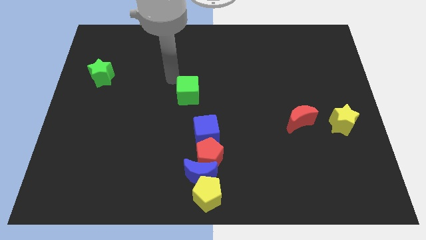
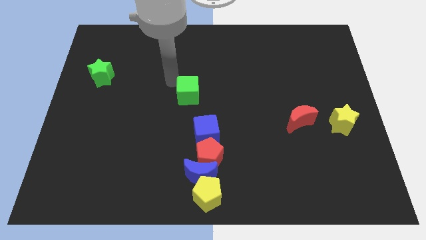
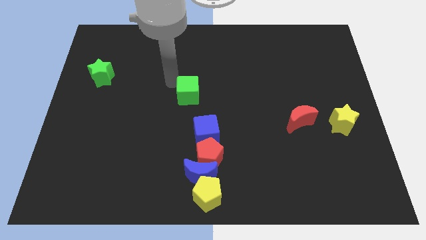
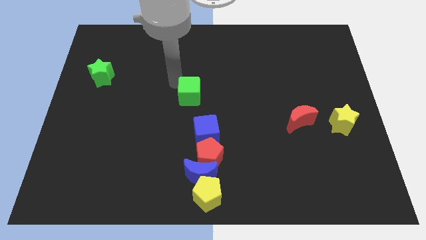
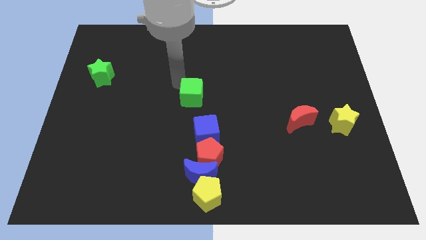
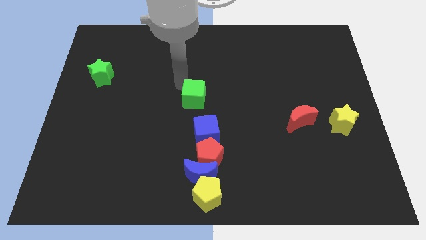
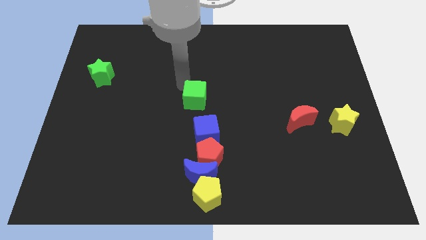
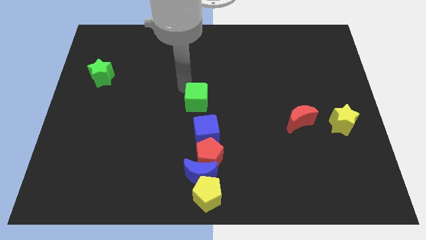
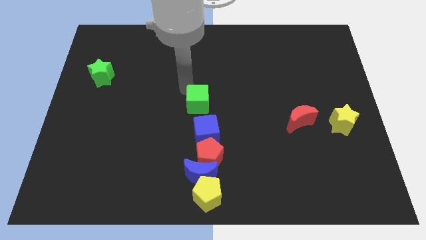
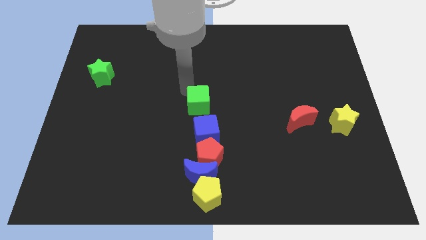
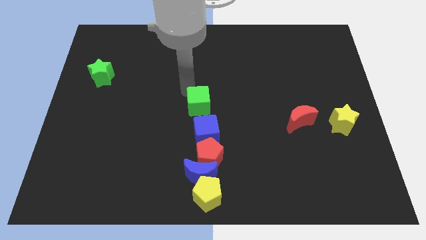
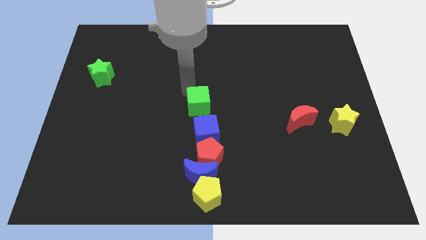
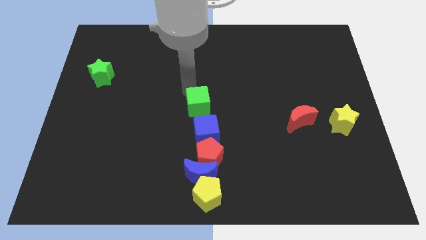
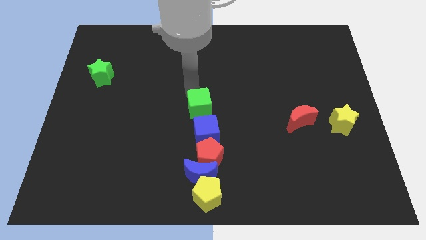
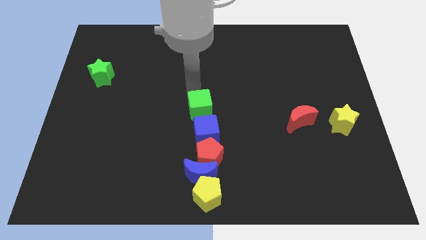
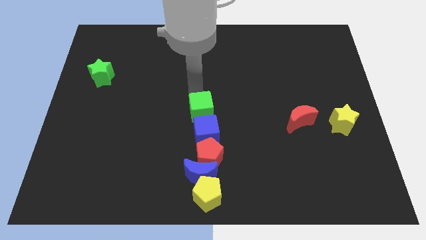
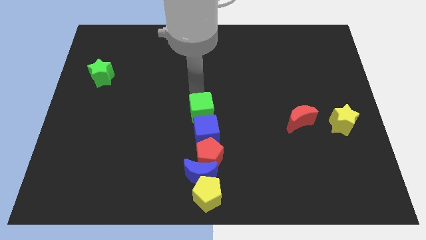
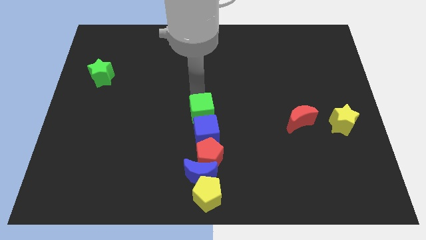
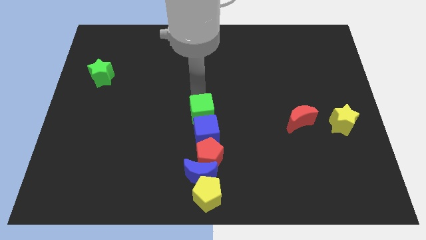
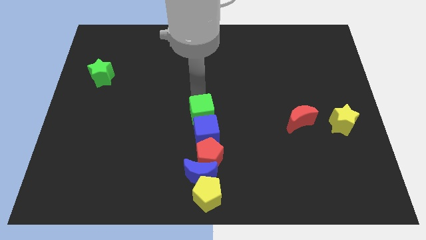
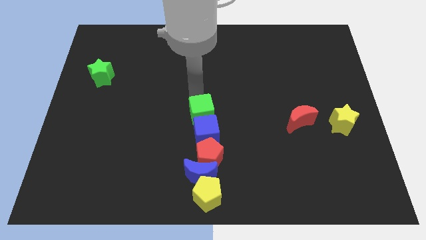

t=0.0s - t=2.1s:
push the green cube to the centre of the board

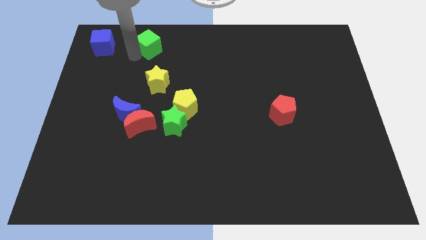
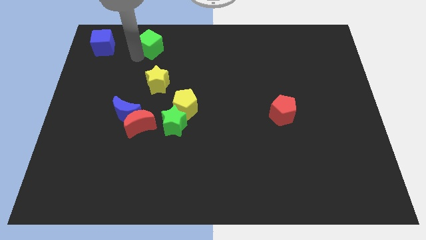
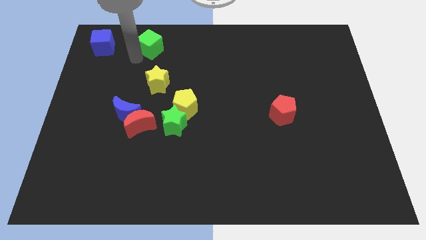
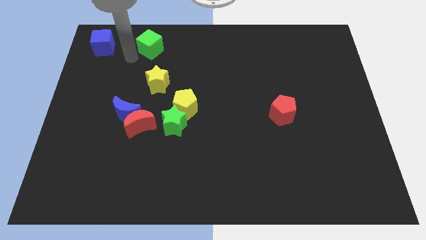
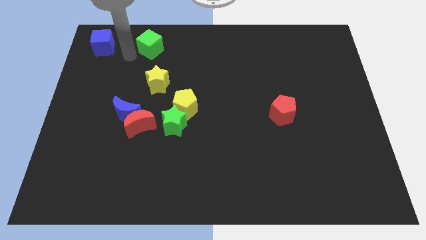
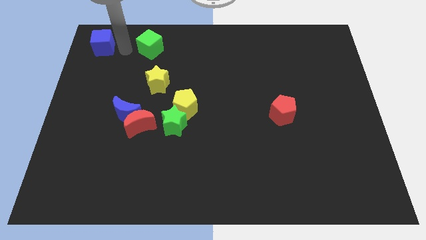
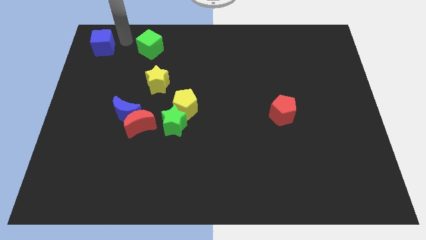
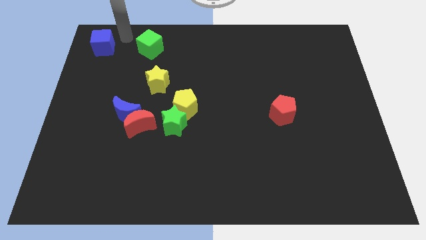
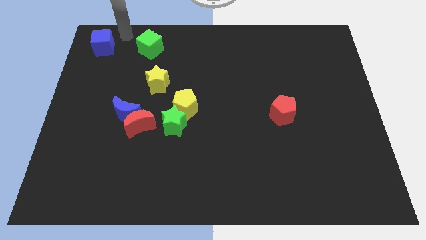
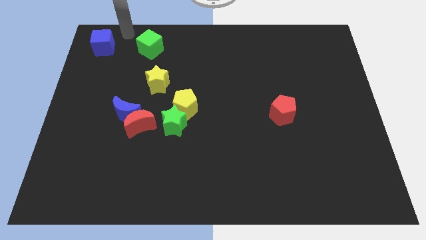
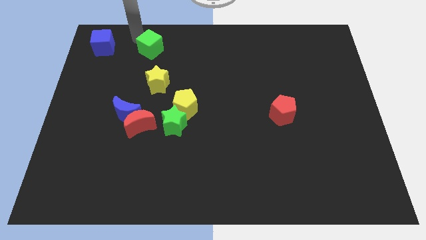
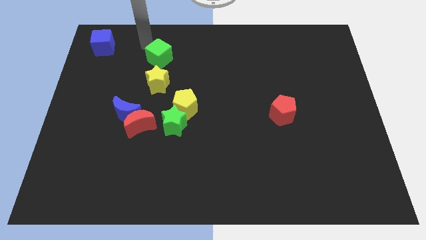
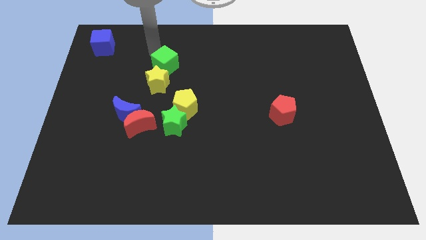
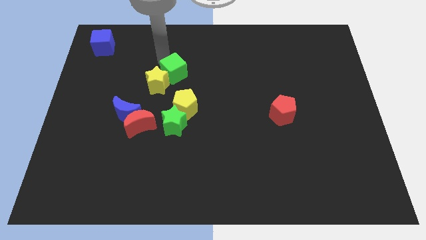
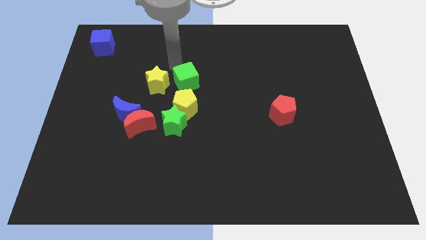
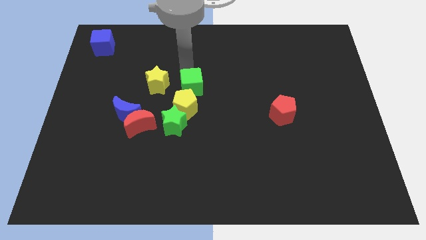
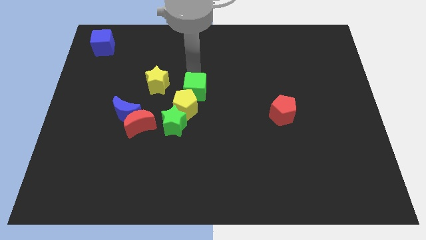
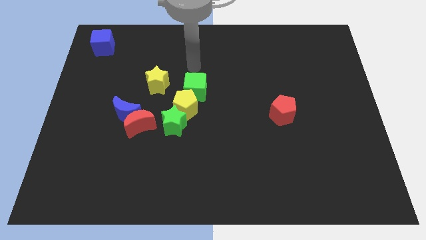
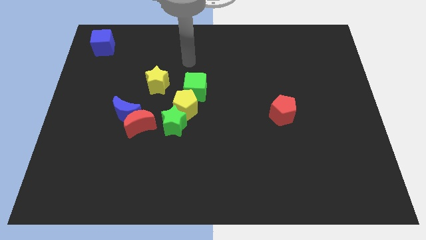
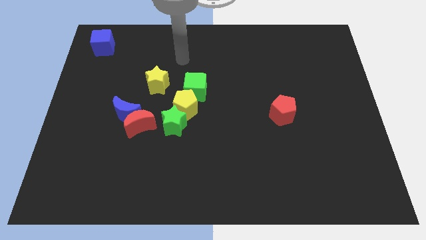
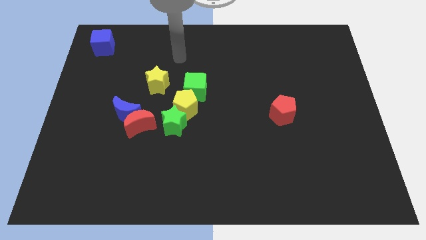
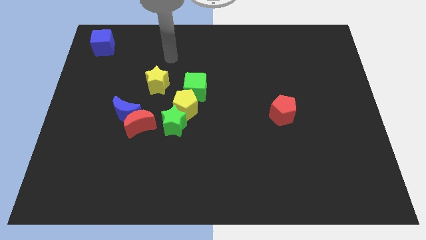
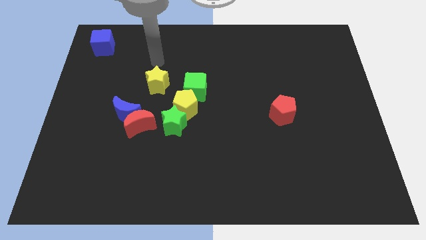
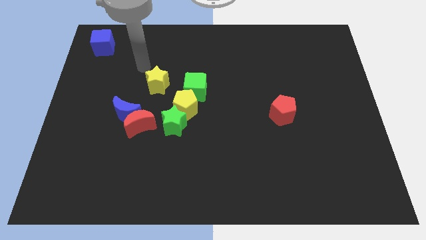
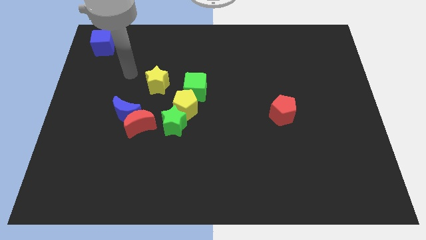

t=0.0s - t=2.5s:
push the green cube towards yellow pentagon and green star

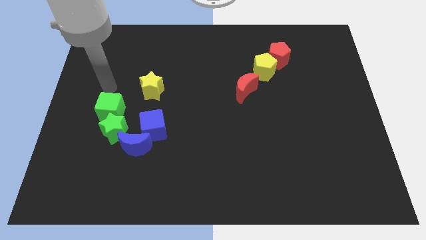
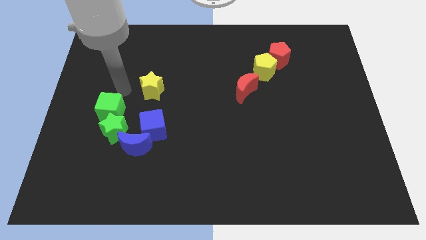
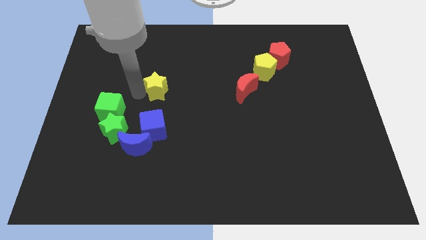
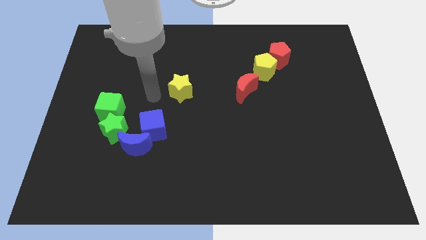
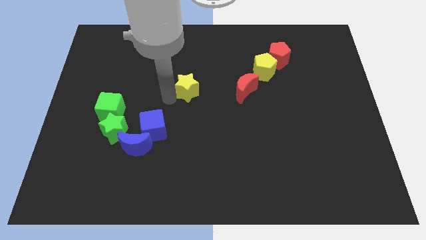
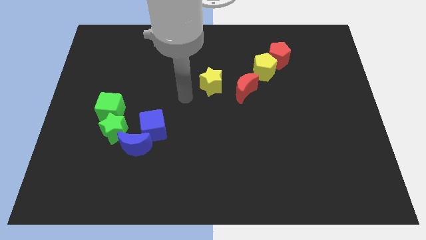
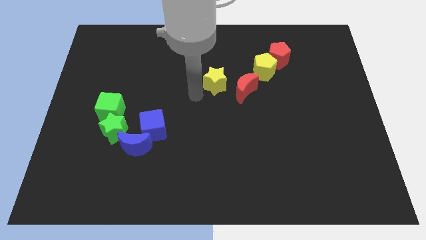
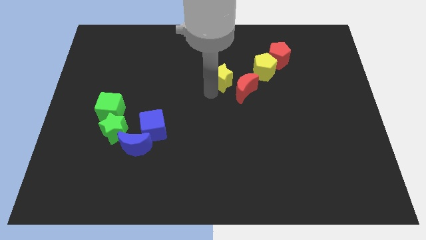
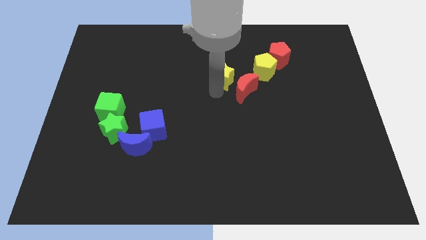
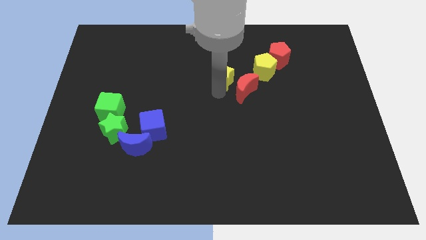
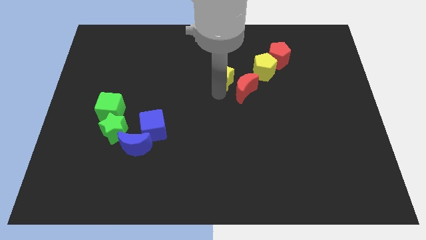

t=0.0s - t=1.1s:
put the yellow star on the left side of the red crescent

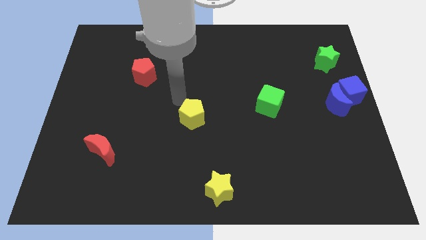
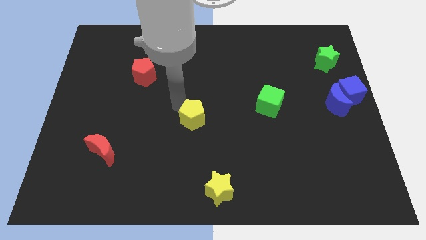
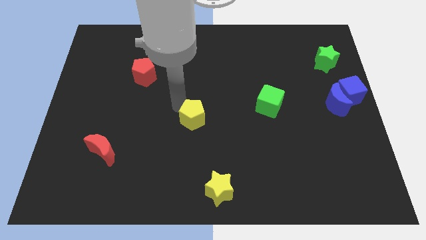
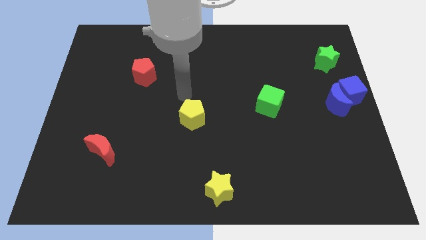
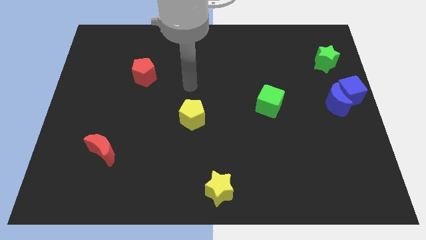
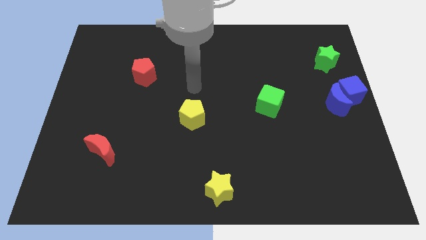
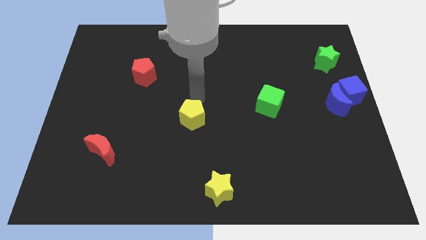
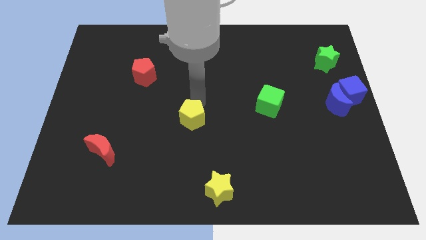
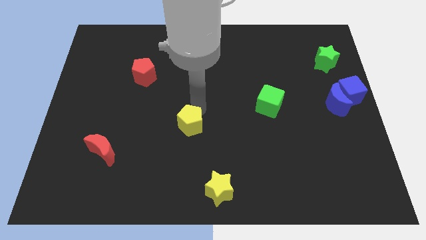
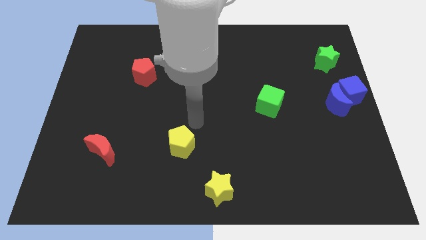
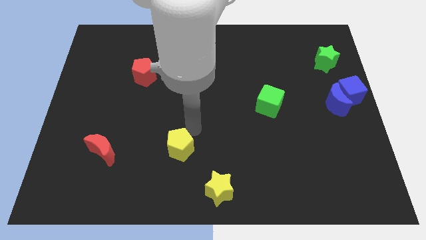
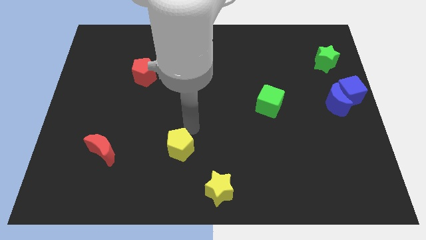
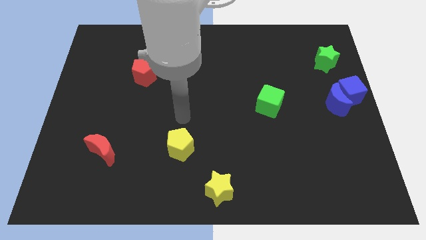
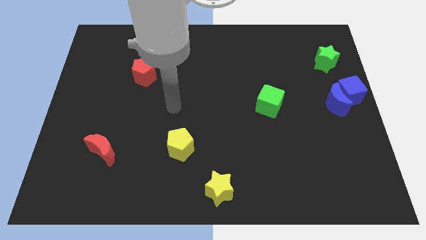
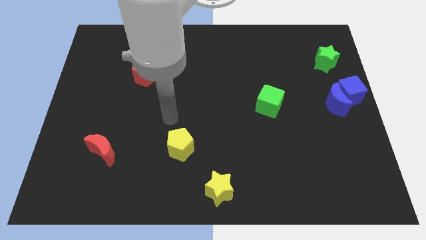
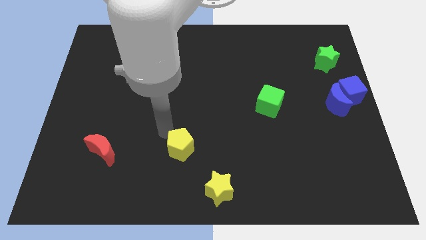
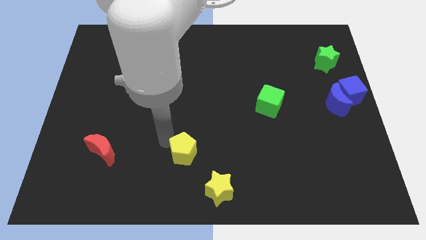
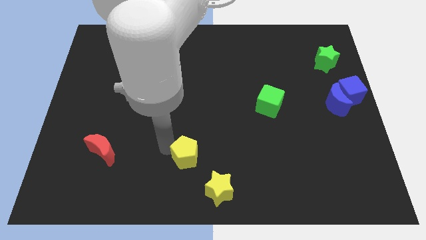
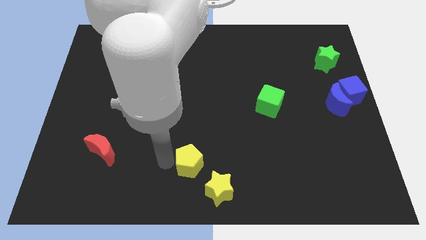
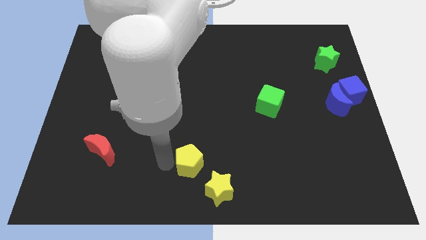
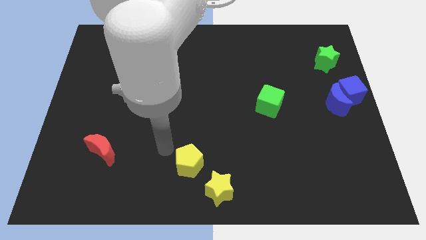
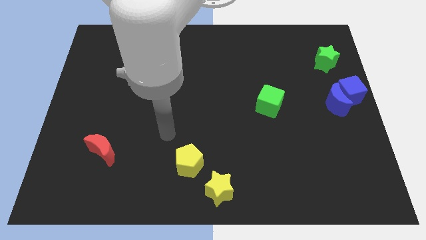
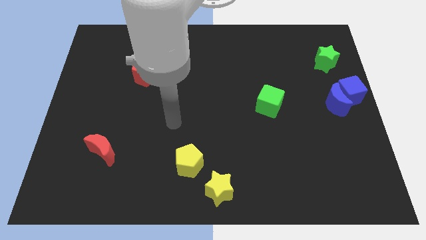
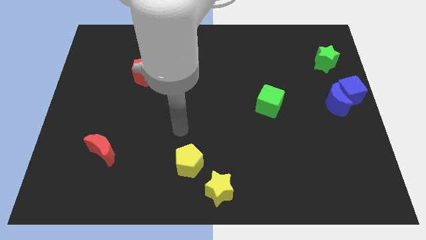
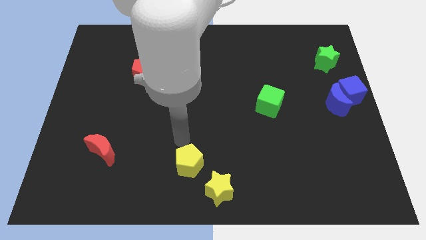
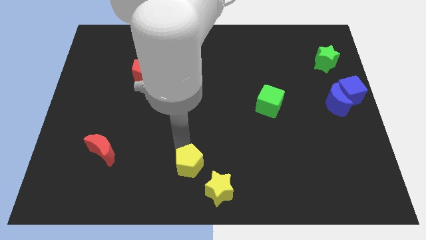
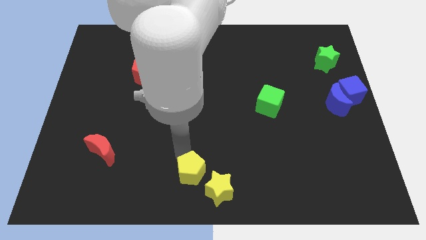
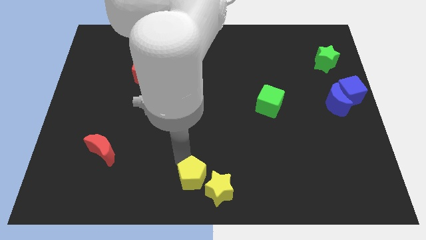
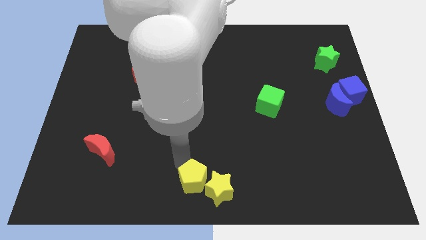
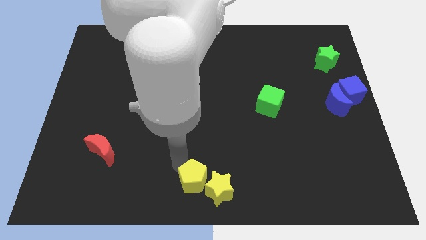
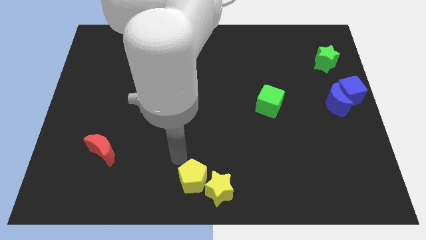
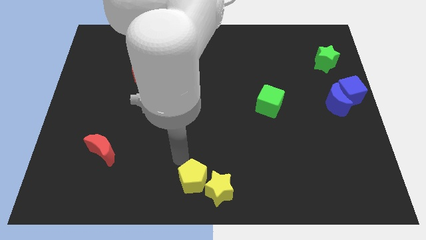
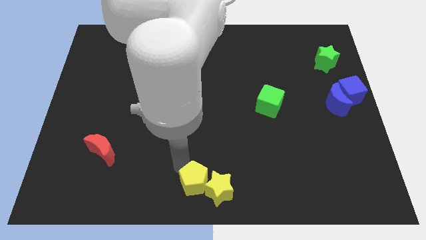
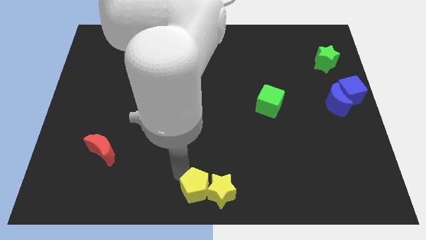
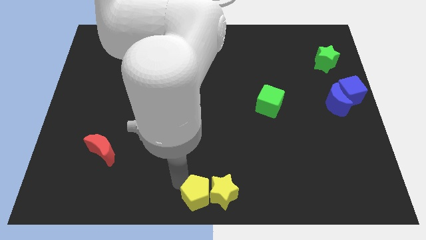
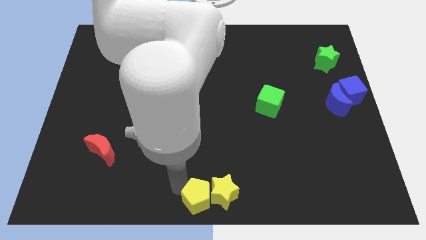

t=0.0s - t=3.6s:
move the yellow pentagon into the left side of the yellow star
